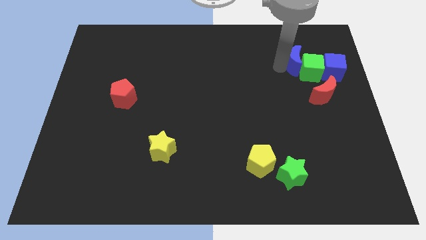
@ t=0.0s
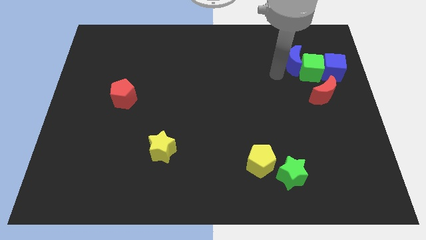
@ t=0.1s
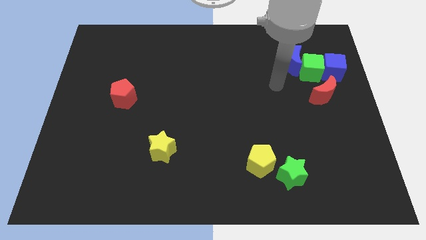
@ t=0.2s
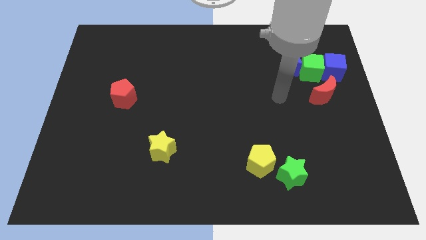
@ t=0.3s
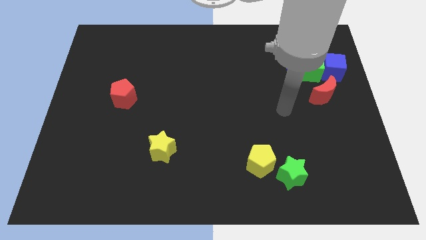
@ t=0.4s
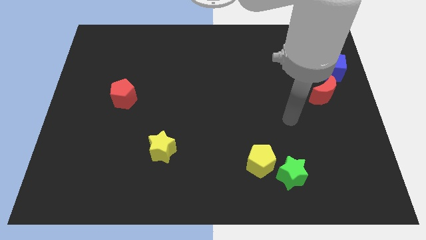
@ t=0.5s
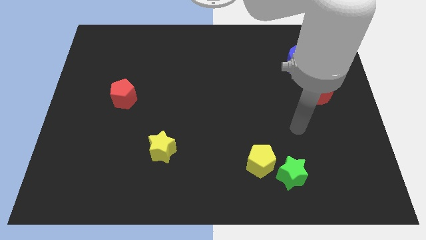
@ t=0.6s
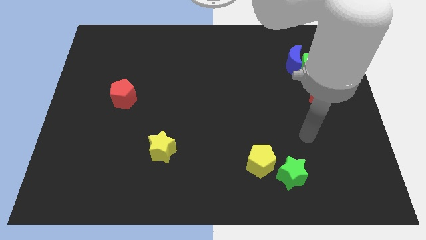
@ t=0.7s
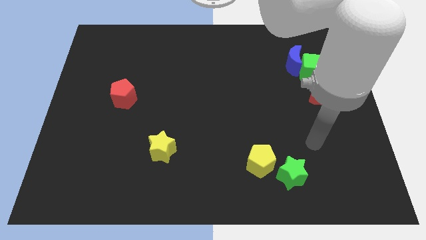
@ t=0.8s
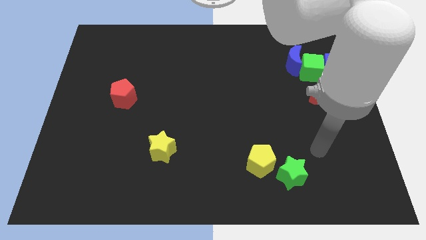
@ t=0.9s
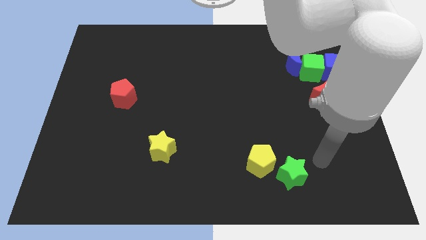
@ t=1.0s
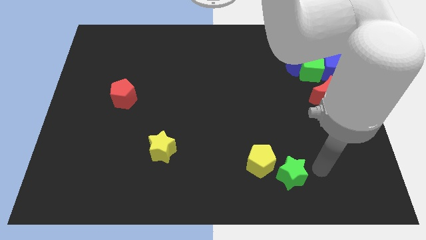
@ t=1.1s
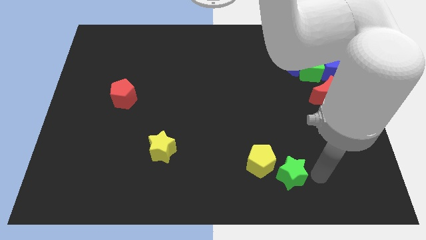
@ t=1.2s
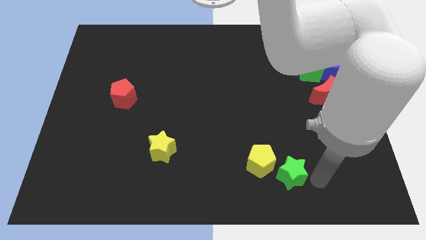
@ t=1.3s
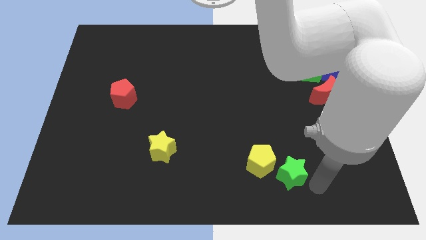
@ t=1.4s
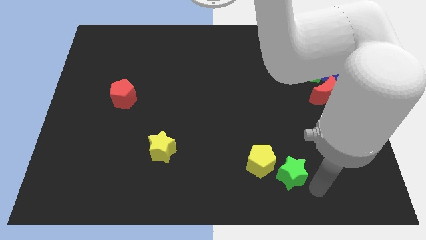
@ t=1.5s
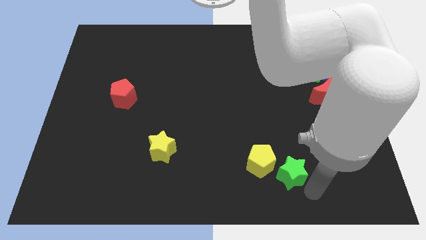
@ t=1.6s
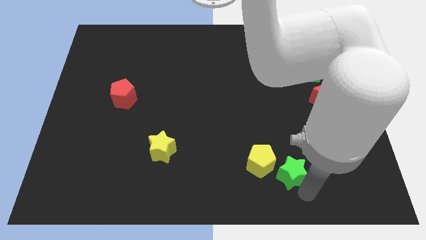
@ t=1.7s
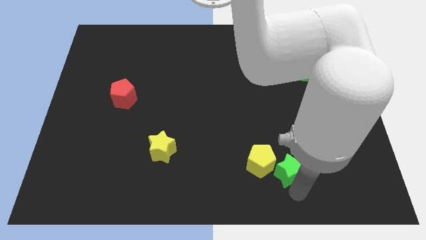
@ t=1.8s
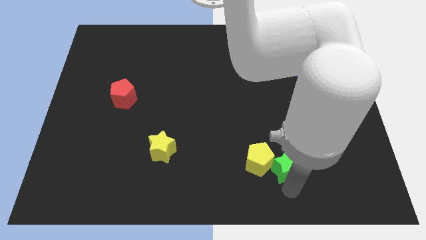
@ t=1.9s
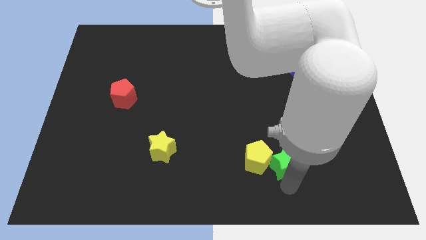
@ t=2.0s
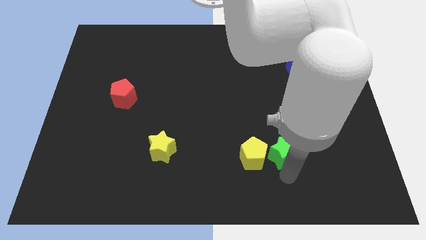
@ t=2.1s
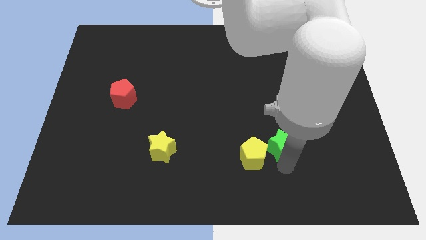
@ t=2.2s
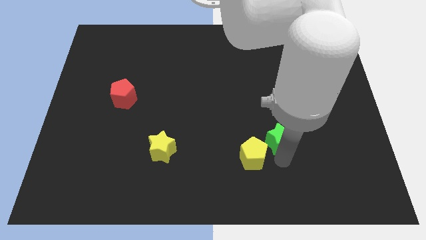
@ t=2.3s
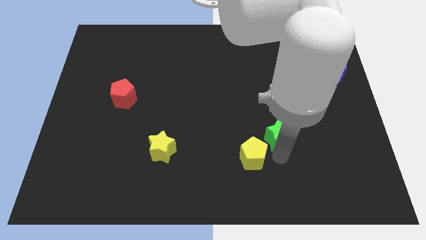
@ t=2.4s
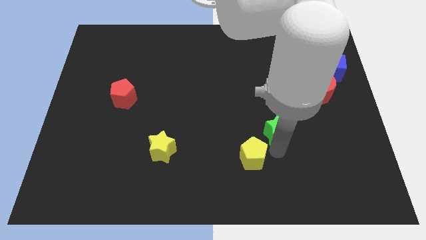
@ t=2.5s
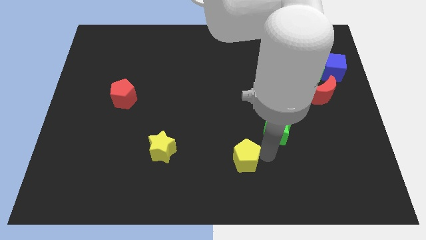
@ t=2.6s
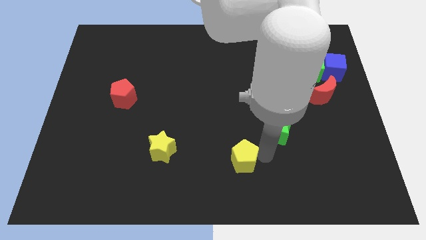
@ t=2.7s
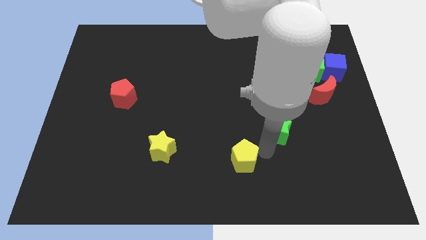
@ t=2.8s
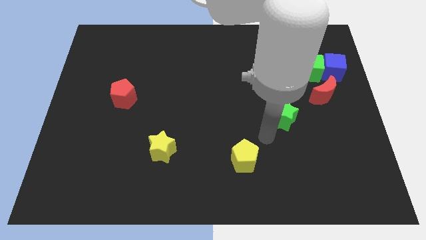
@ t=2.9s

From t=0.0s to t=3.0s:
separate the green star from yellow pentagon

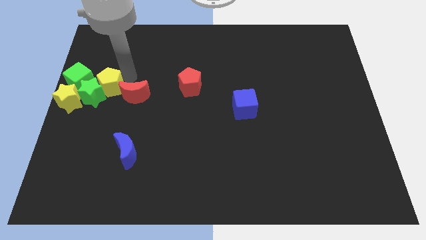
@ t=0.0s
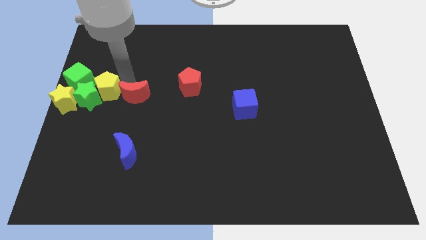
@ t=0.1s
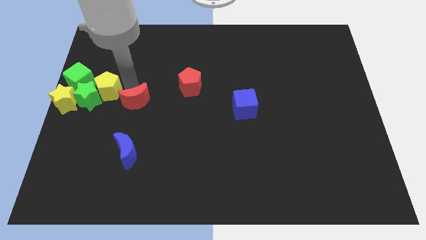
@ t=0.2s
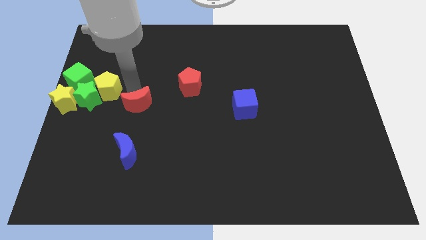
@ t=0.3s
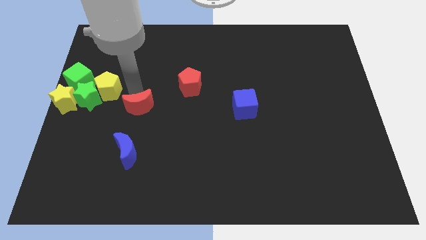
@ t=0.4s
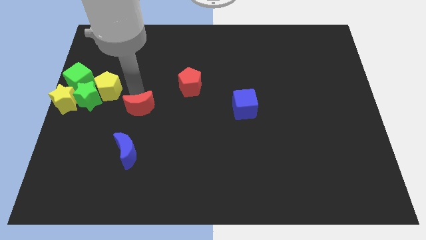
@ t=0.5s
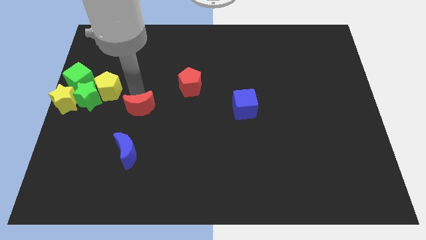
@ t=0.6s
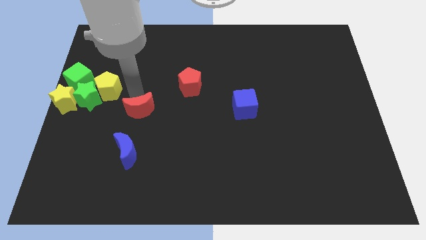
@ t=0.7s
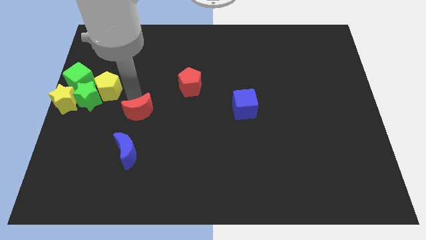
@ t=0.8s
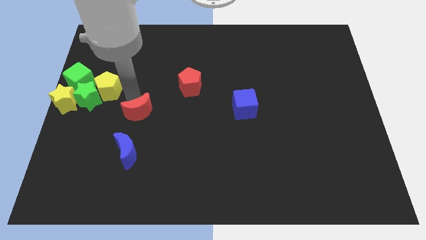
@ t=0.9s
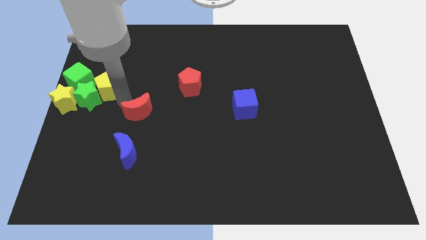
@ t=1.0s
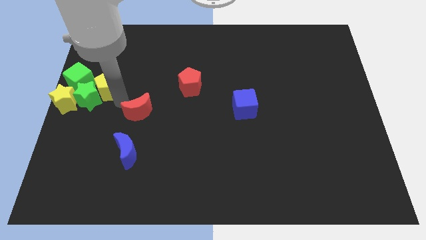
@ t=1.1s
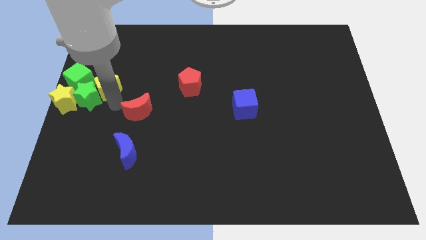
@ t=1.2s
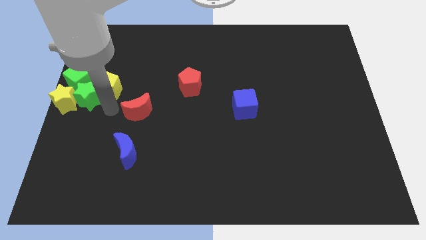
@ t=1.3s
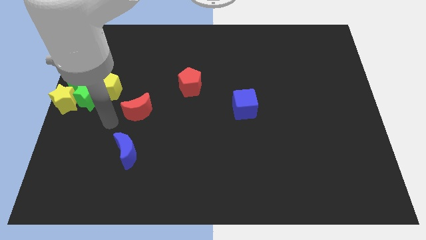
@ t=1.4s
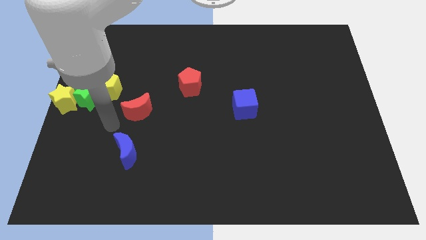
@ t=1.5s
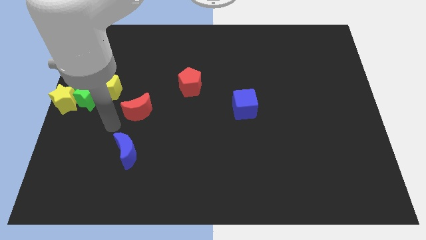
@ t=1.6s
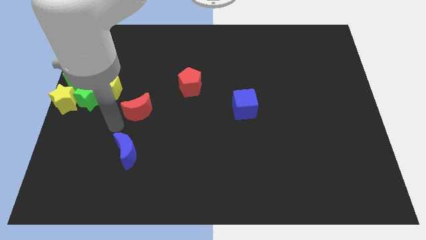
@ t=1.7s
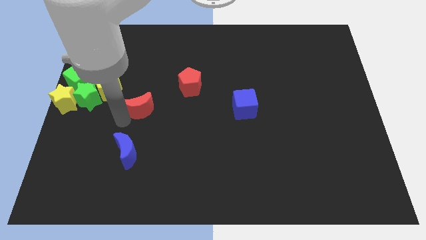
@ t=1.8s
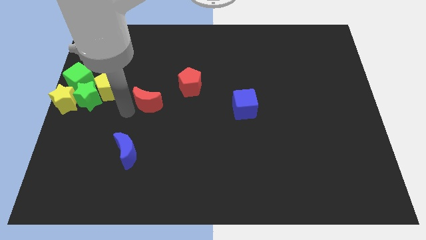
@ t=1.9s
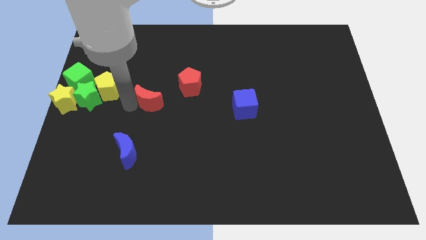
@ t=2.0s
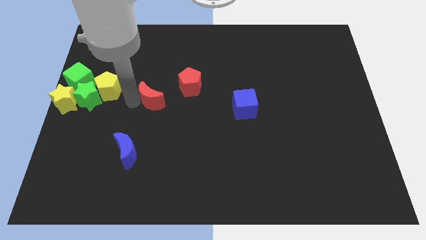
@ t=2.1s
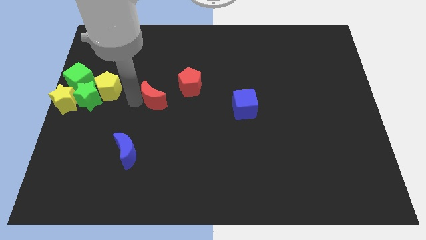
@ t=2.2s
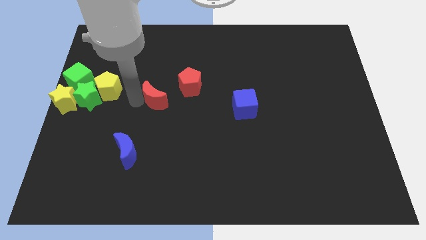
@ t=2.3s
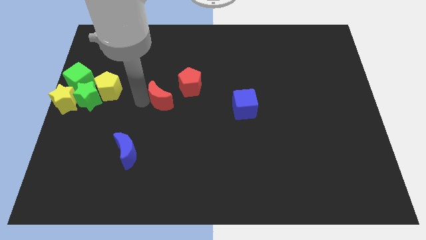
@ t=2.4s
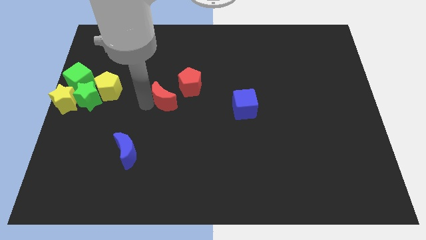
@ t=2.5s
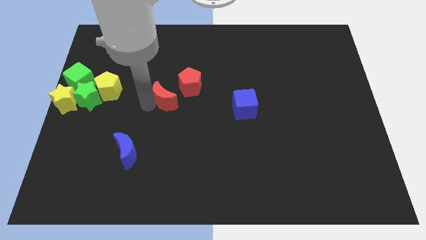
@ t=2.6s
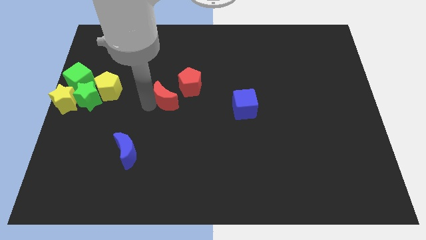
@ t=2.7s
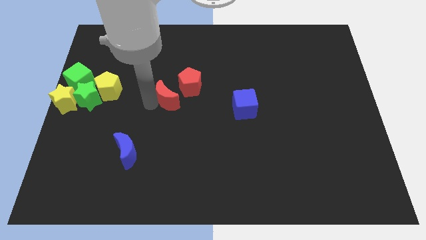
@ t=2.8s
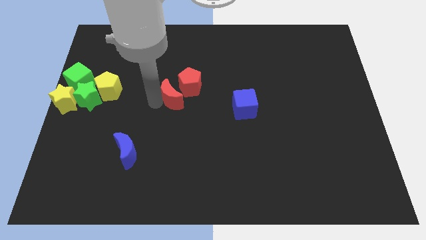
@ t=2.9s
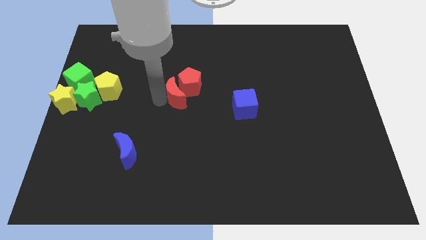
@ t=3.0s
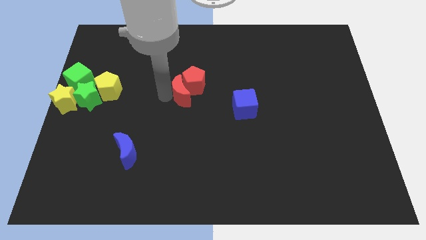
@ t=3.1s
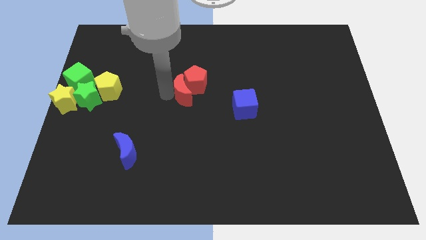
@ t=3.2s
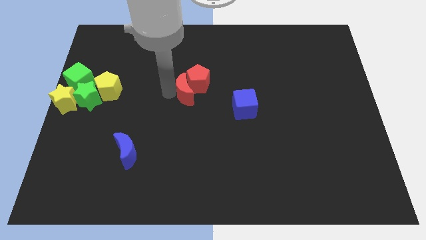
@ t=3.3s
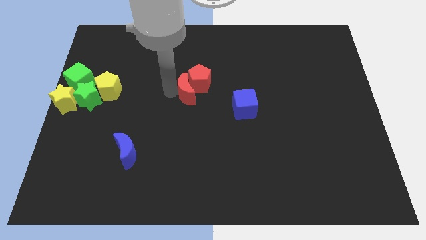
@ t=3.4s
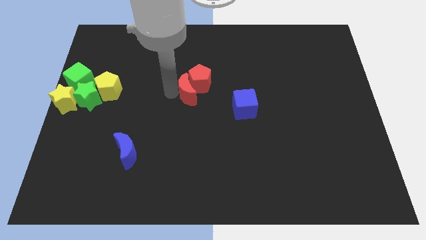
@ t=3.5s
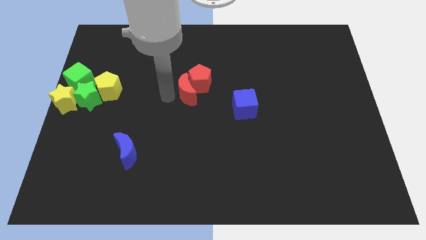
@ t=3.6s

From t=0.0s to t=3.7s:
slightly move the red crescent to the left side of the red pentagon

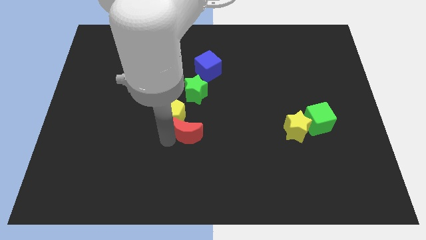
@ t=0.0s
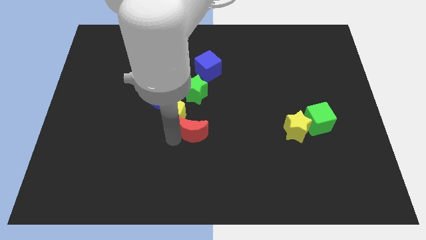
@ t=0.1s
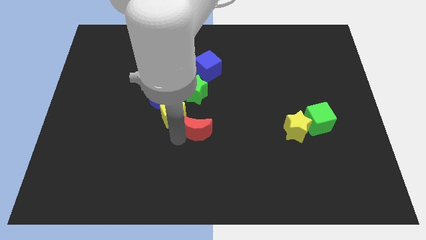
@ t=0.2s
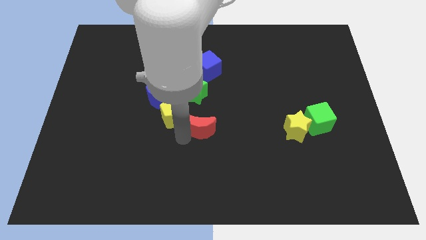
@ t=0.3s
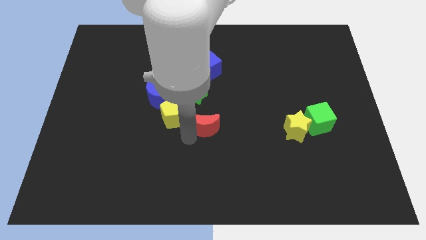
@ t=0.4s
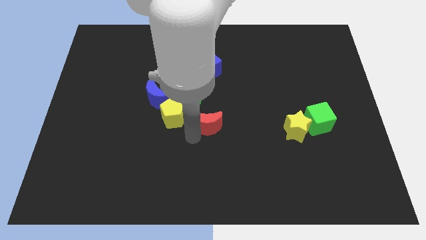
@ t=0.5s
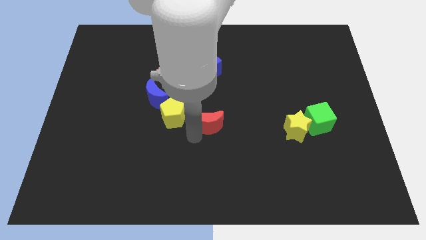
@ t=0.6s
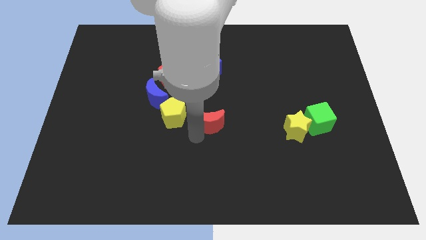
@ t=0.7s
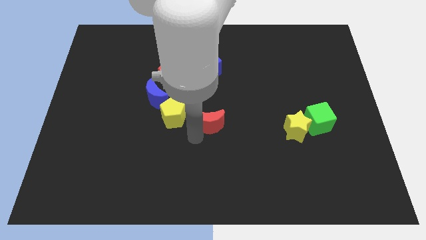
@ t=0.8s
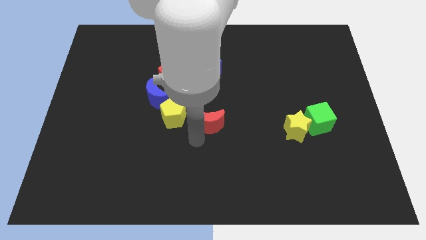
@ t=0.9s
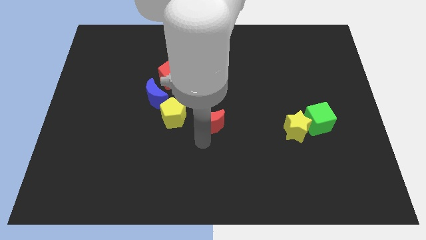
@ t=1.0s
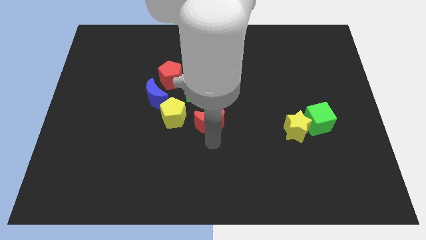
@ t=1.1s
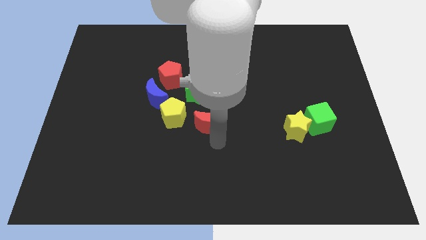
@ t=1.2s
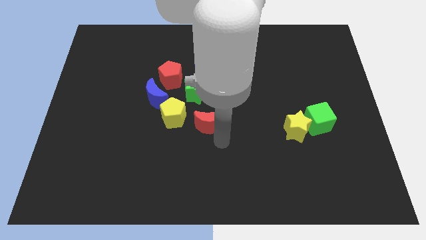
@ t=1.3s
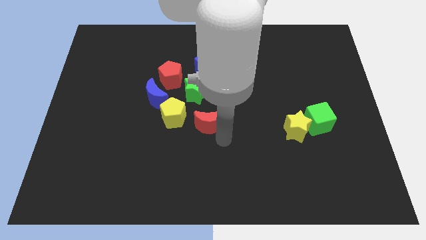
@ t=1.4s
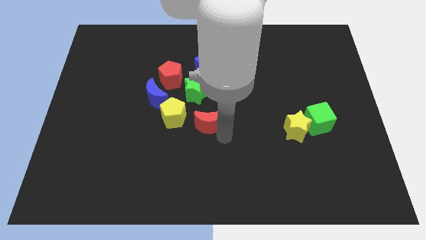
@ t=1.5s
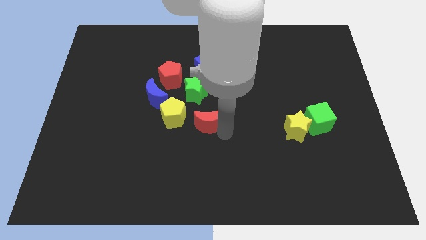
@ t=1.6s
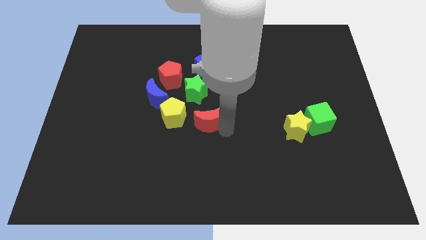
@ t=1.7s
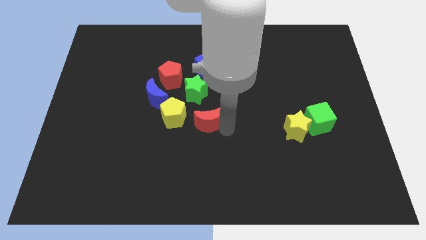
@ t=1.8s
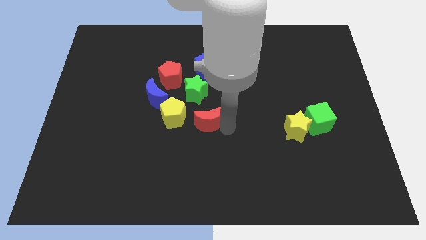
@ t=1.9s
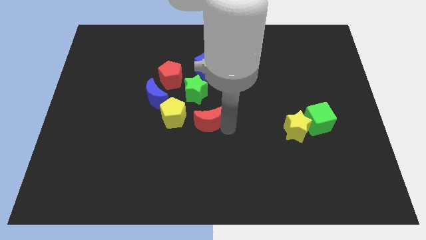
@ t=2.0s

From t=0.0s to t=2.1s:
move the red moon towards the right of the yellow pentagon

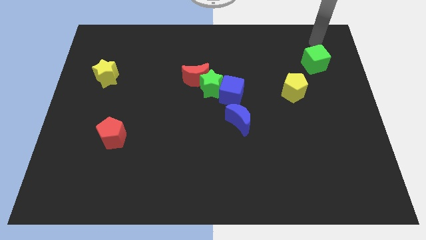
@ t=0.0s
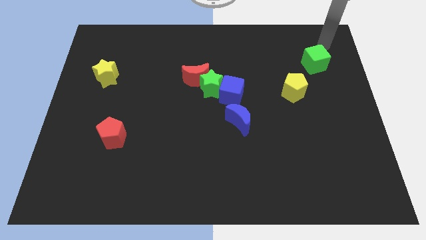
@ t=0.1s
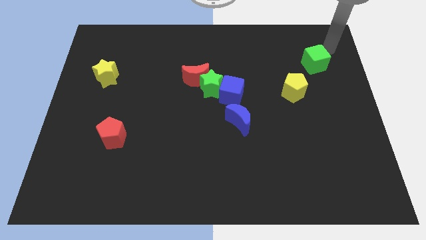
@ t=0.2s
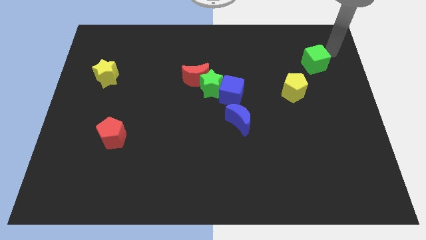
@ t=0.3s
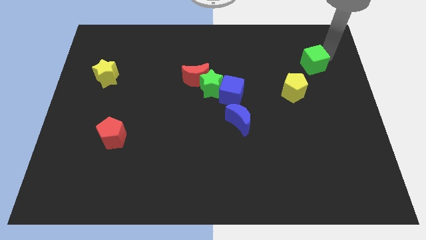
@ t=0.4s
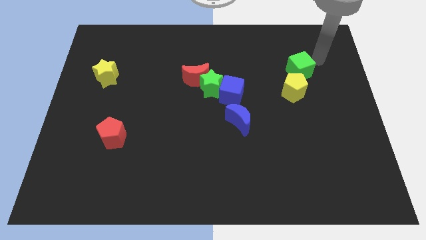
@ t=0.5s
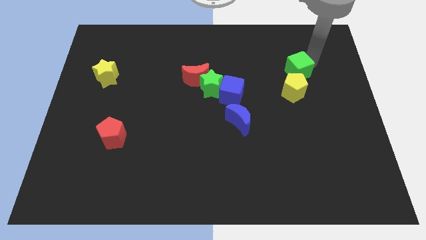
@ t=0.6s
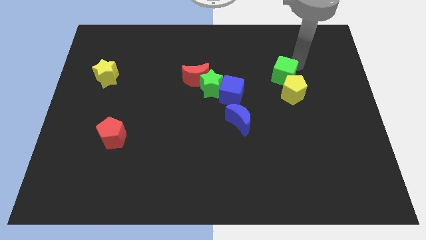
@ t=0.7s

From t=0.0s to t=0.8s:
push green cube in yellow pentagon
